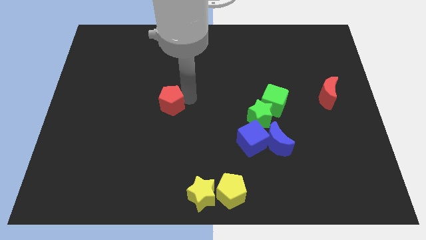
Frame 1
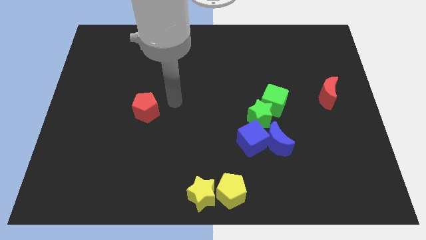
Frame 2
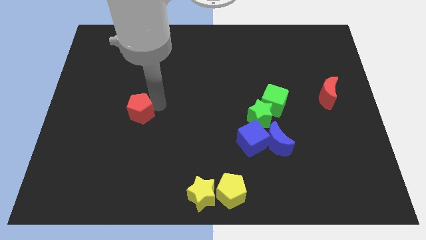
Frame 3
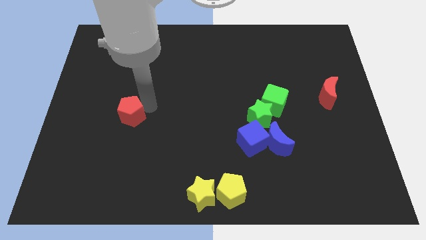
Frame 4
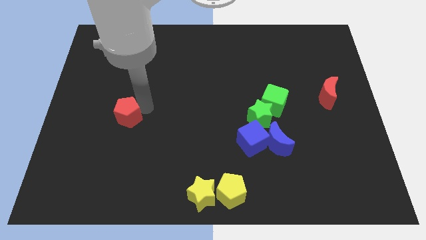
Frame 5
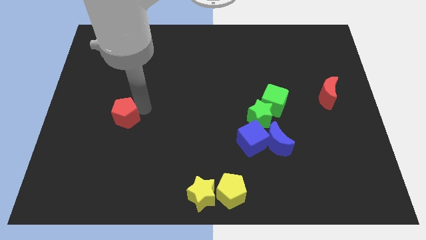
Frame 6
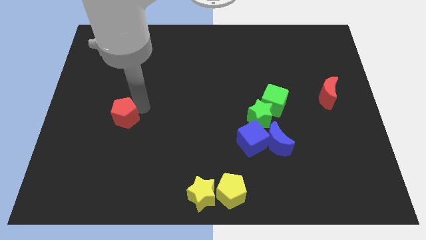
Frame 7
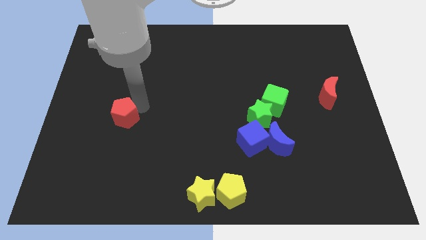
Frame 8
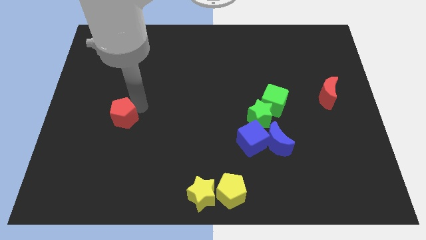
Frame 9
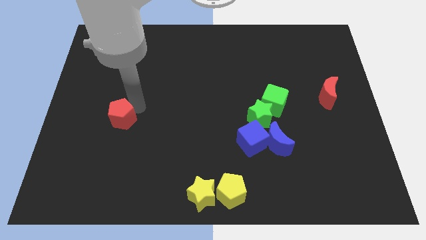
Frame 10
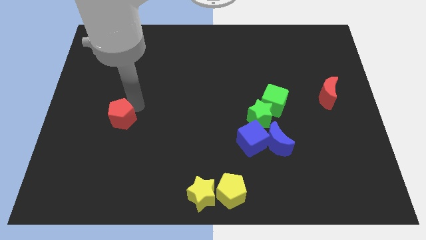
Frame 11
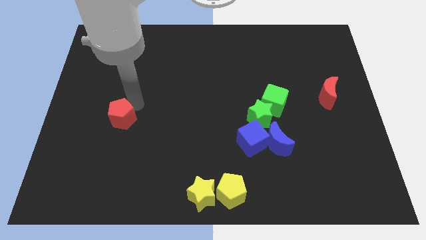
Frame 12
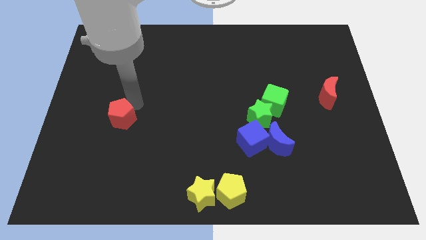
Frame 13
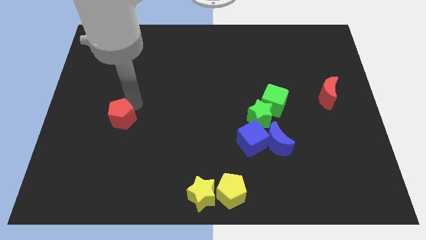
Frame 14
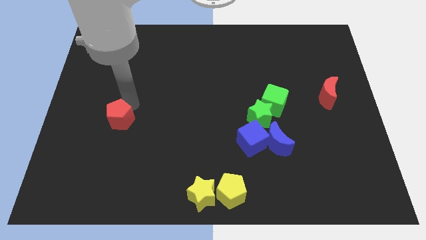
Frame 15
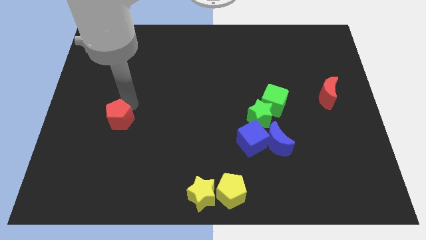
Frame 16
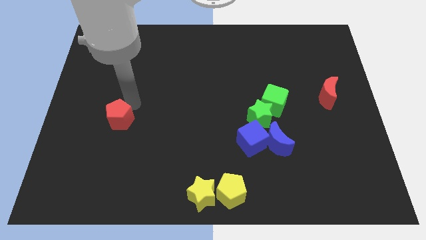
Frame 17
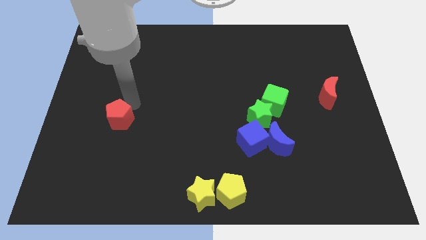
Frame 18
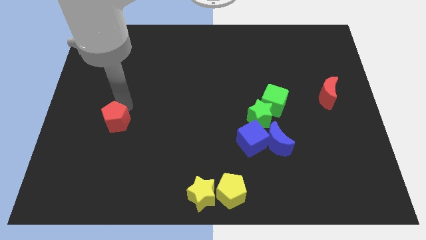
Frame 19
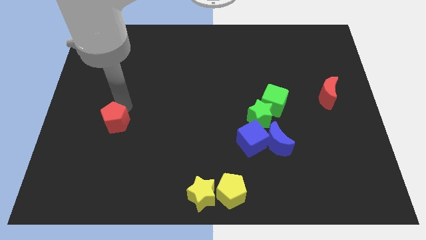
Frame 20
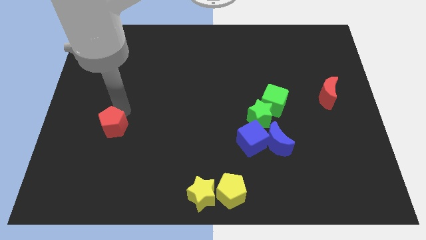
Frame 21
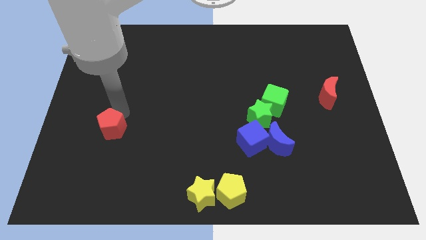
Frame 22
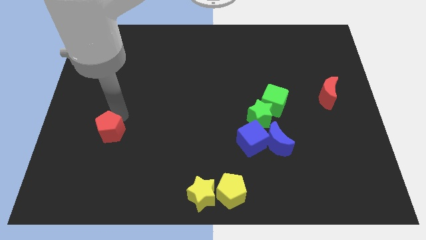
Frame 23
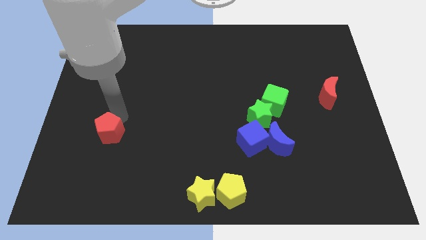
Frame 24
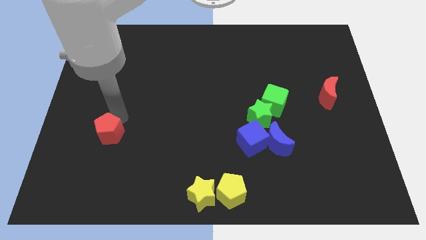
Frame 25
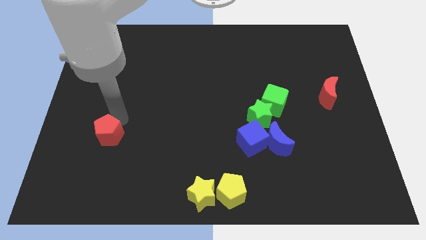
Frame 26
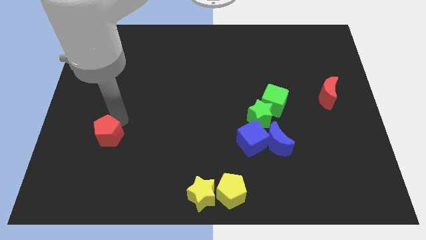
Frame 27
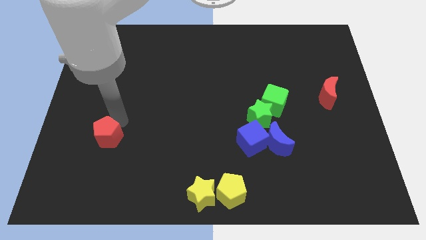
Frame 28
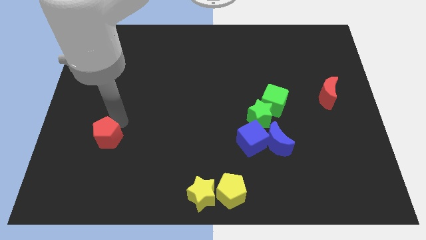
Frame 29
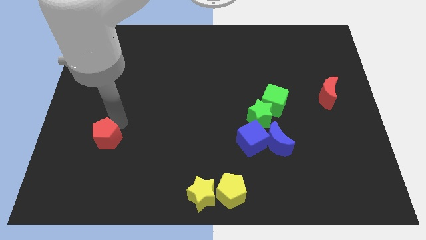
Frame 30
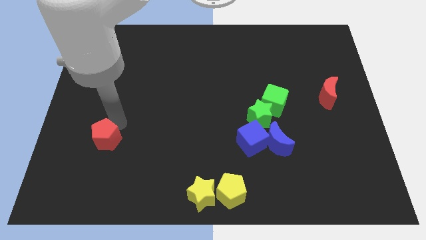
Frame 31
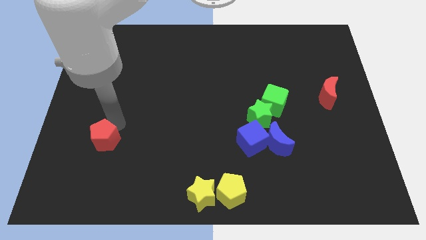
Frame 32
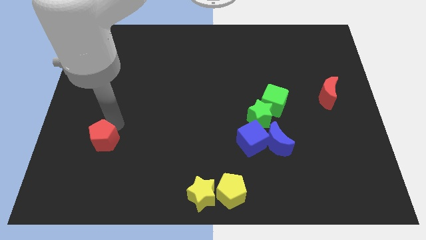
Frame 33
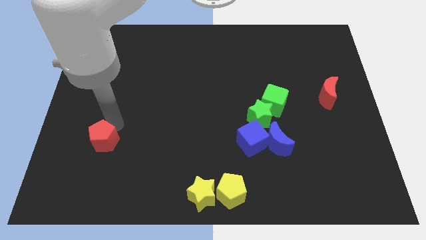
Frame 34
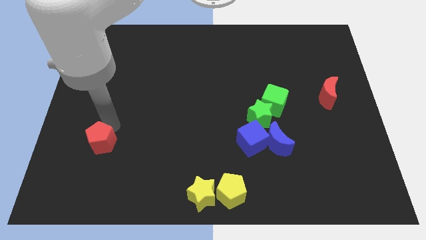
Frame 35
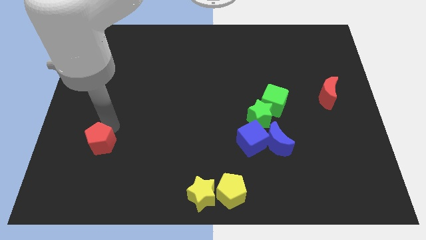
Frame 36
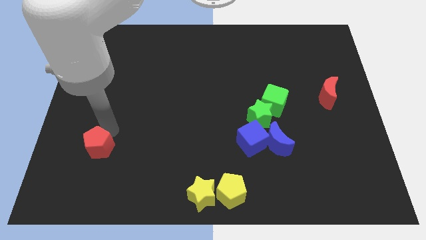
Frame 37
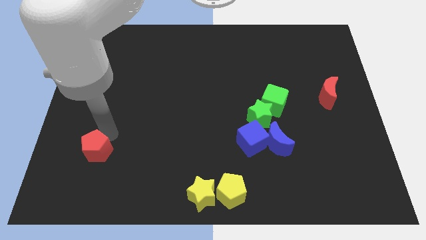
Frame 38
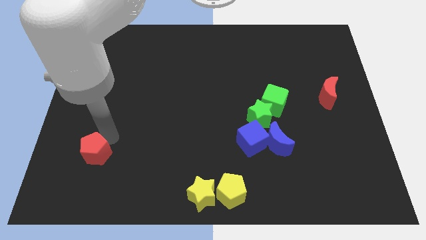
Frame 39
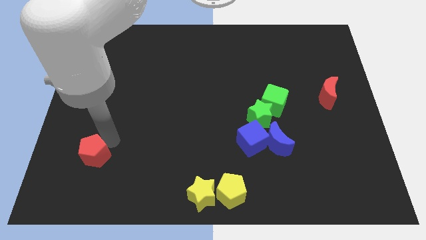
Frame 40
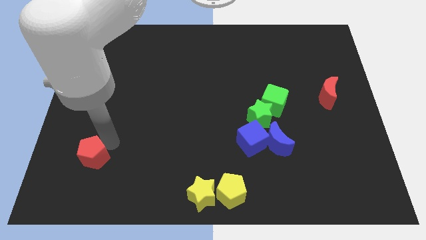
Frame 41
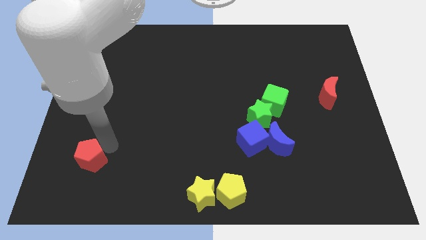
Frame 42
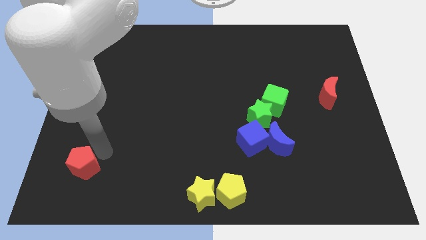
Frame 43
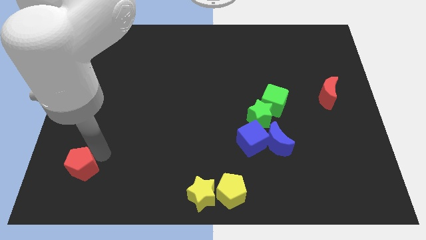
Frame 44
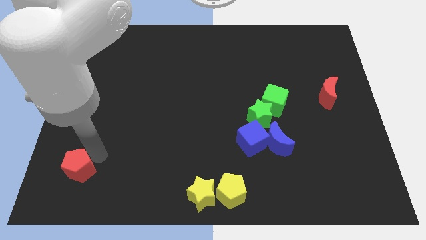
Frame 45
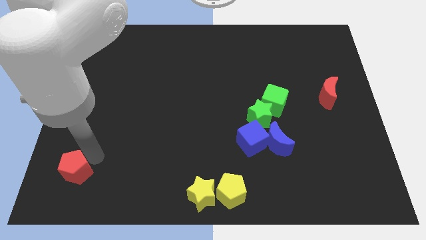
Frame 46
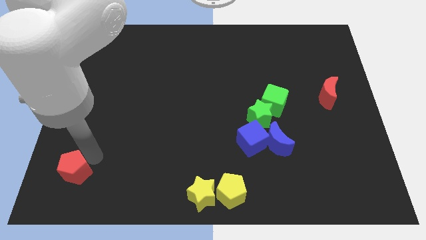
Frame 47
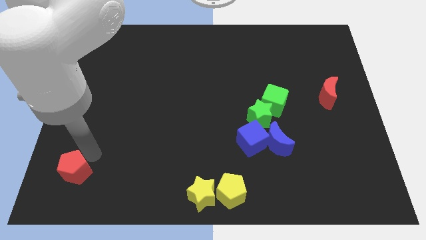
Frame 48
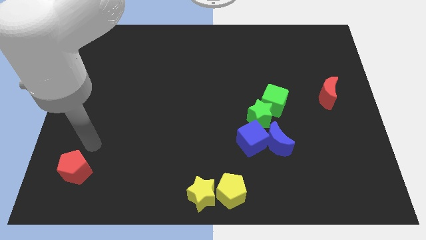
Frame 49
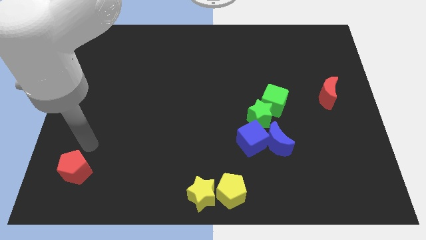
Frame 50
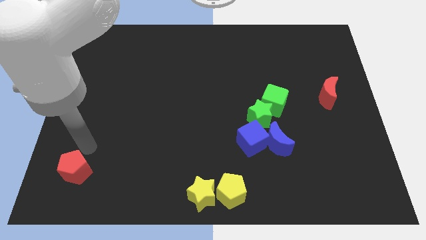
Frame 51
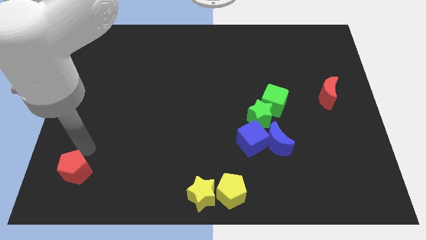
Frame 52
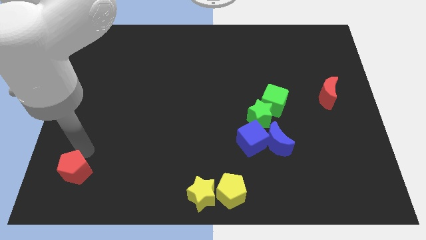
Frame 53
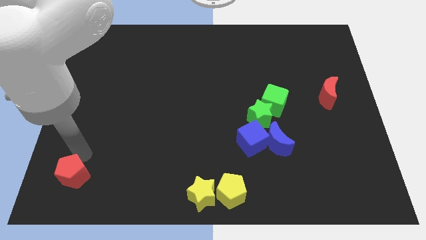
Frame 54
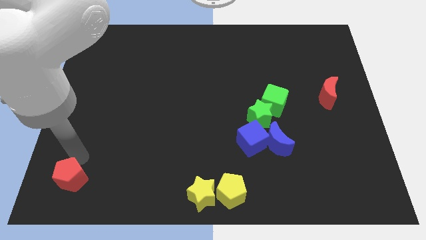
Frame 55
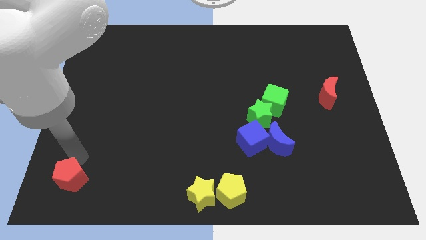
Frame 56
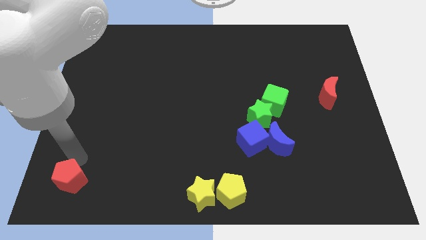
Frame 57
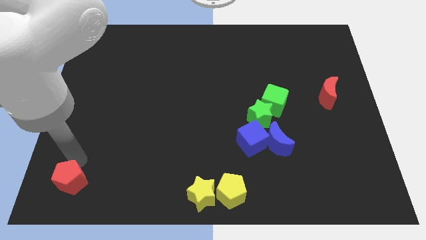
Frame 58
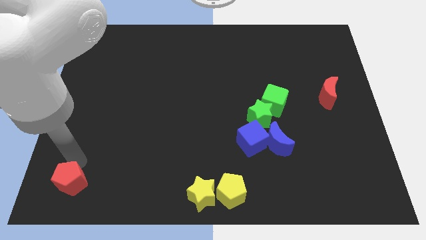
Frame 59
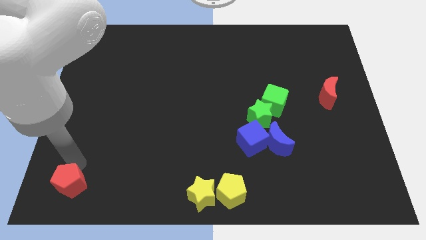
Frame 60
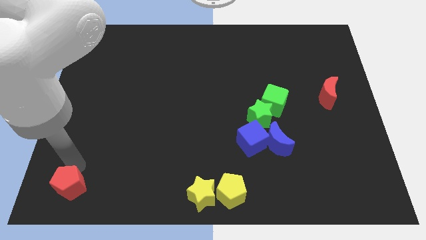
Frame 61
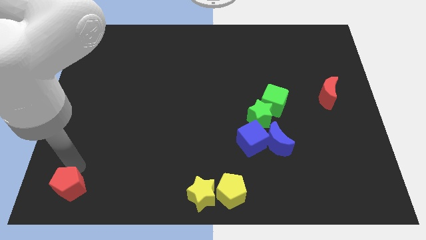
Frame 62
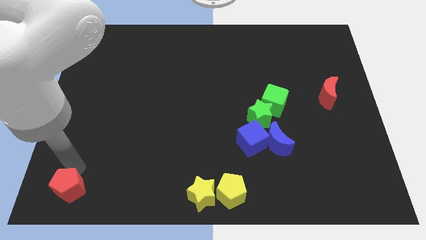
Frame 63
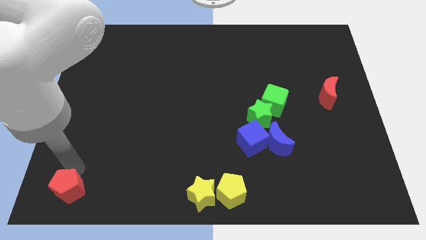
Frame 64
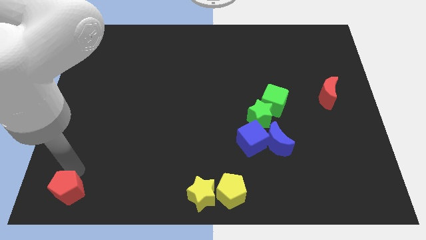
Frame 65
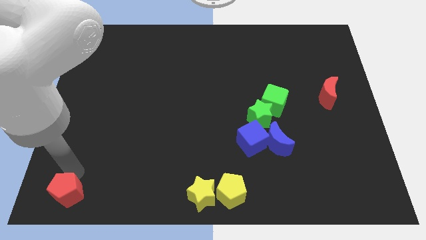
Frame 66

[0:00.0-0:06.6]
push the red pentagon to the bottom left of the board

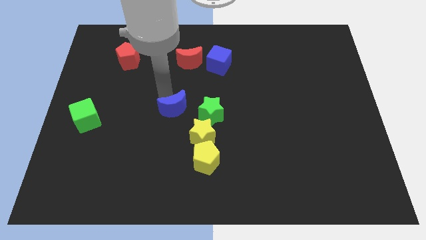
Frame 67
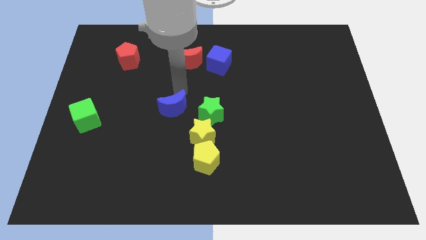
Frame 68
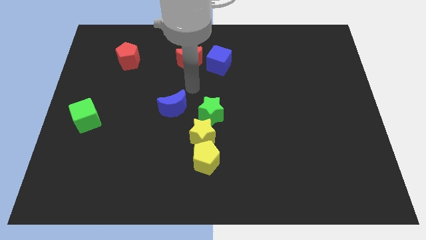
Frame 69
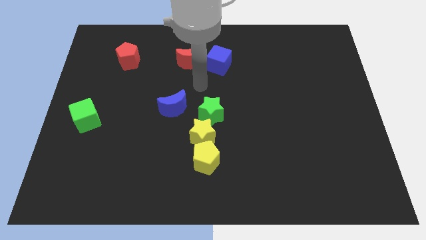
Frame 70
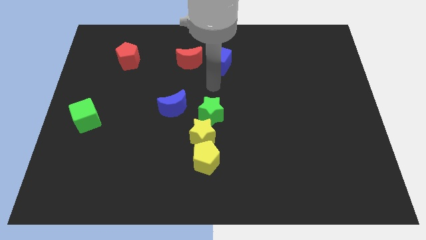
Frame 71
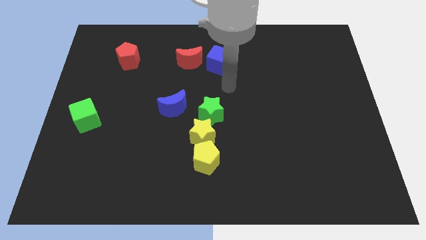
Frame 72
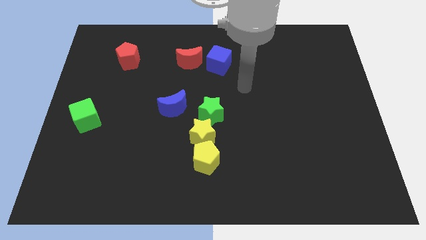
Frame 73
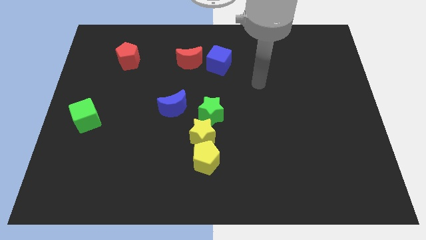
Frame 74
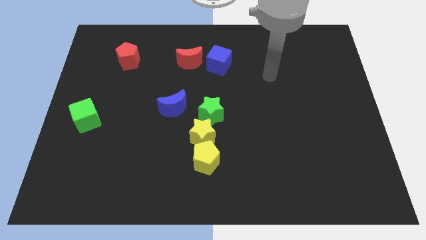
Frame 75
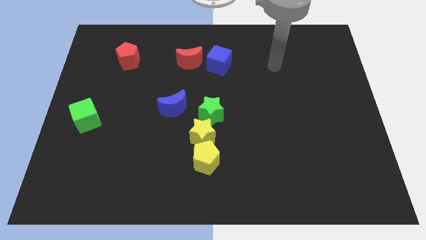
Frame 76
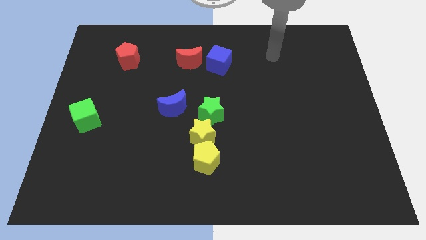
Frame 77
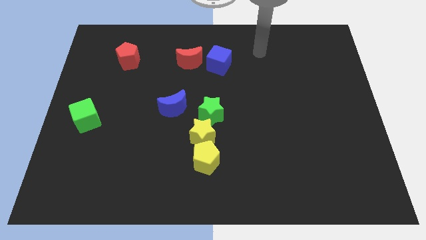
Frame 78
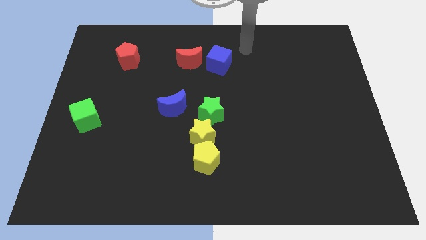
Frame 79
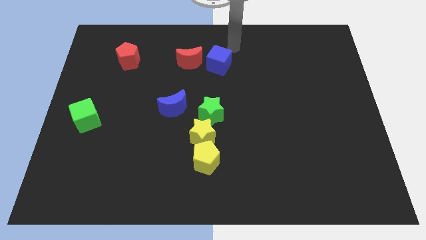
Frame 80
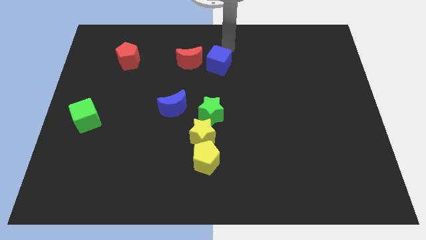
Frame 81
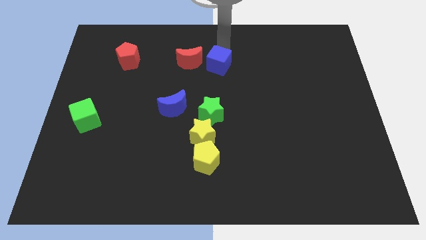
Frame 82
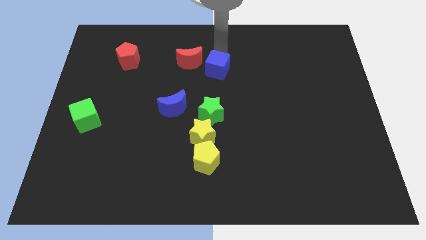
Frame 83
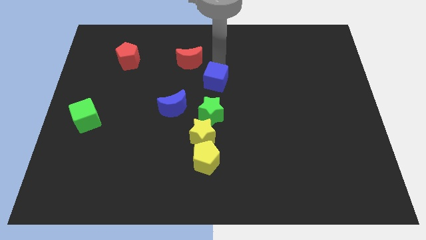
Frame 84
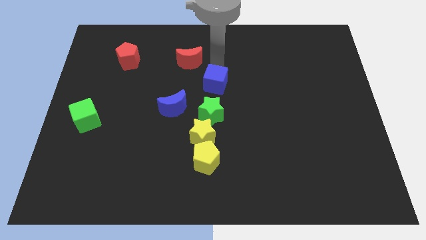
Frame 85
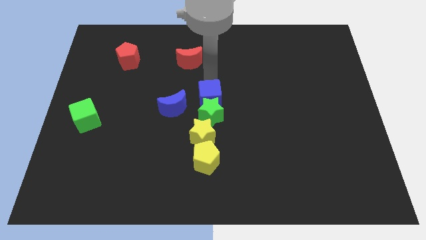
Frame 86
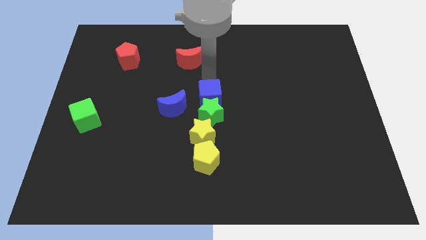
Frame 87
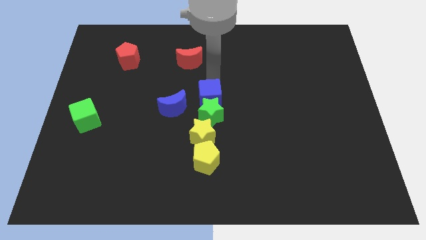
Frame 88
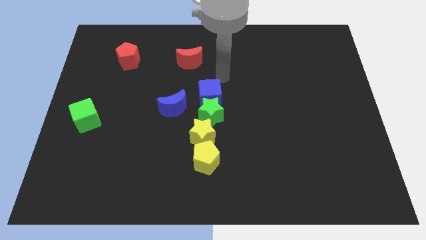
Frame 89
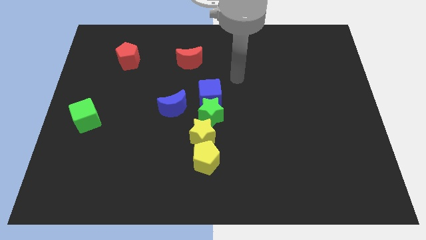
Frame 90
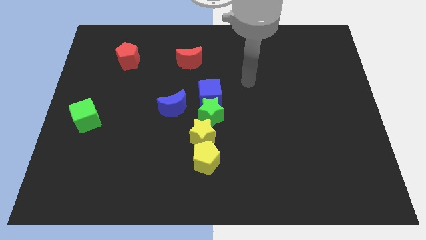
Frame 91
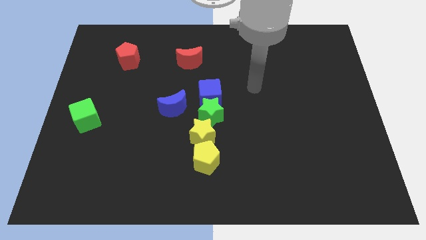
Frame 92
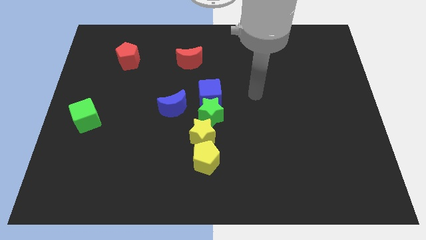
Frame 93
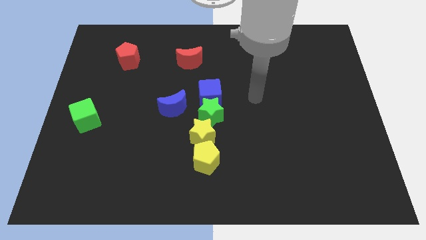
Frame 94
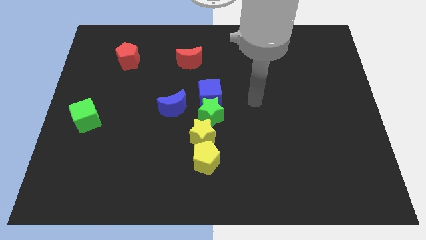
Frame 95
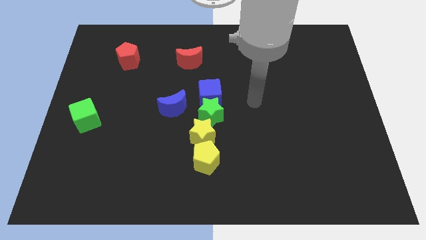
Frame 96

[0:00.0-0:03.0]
move the blue cube into the green star
